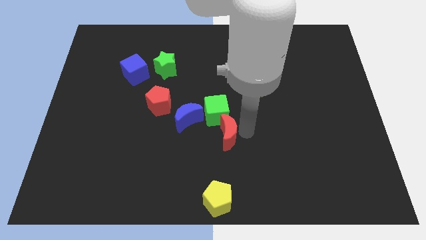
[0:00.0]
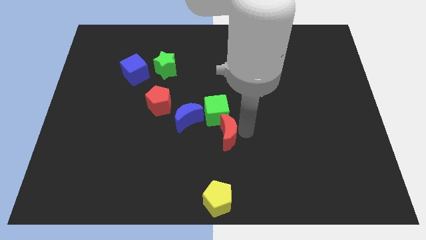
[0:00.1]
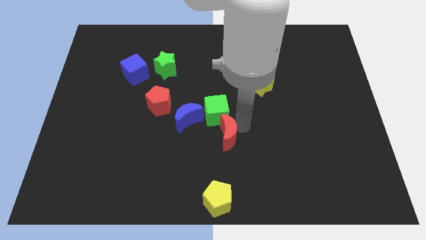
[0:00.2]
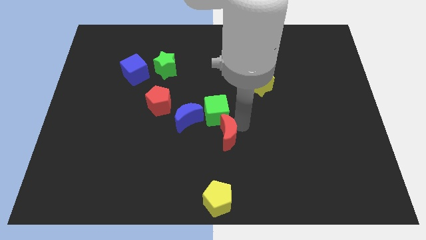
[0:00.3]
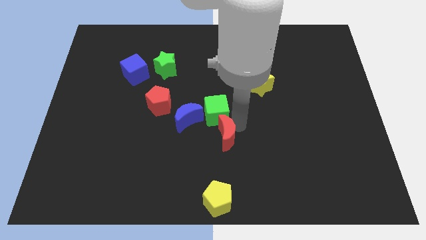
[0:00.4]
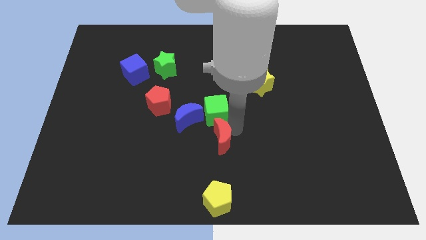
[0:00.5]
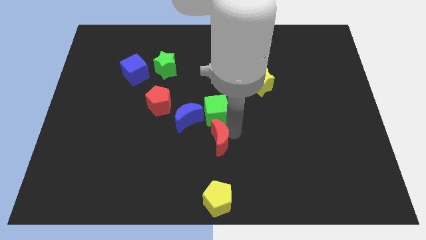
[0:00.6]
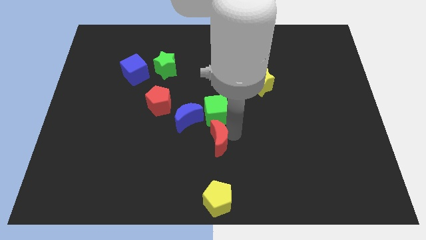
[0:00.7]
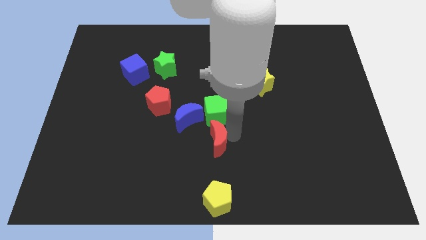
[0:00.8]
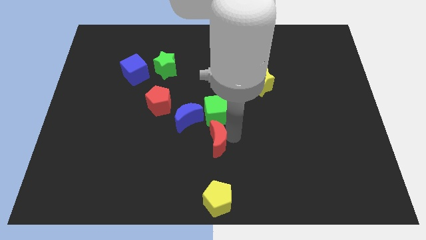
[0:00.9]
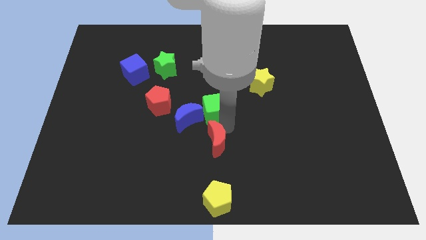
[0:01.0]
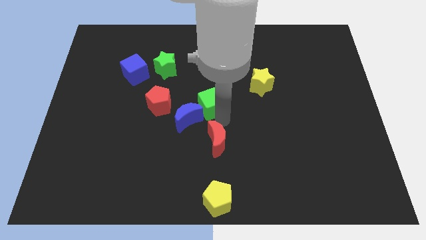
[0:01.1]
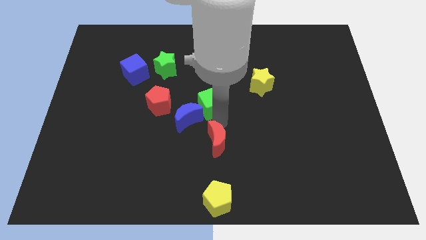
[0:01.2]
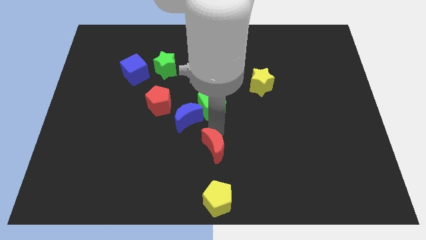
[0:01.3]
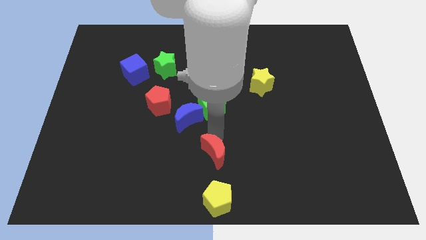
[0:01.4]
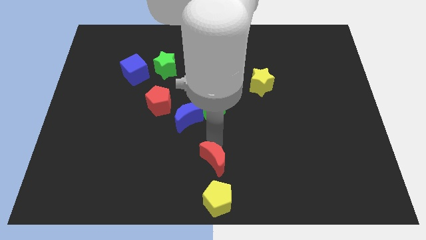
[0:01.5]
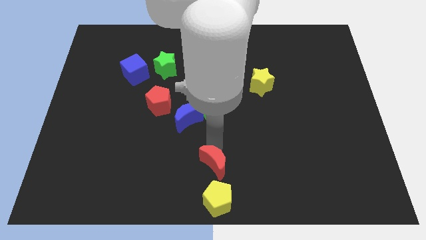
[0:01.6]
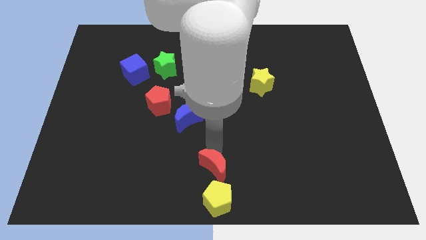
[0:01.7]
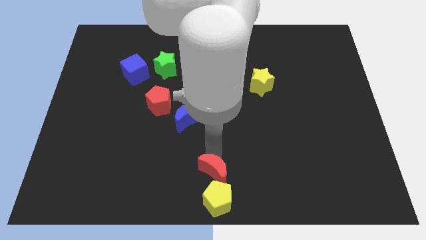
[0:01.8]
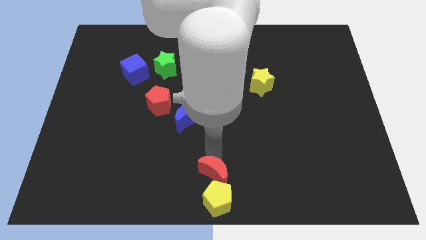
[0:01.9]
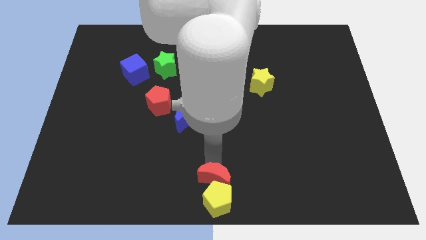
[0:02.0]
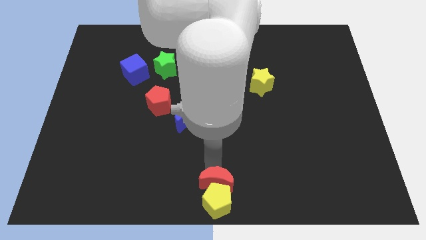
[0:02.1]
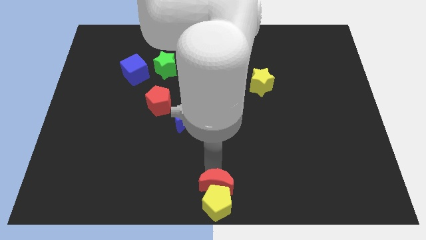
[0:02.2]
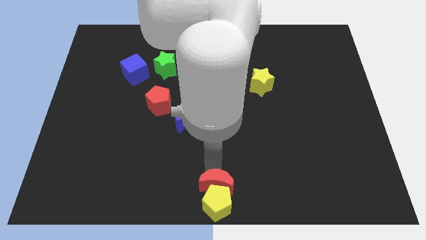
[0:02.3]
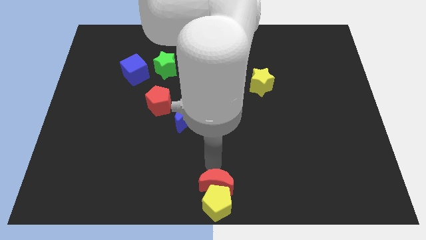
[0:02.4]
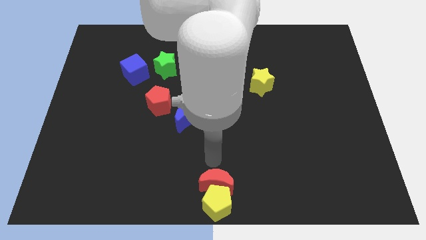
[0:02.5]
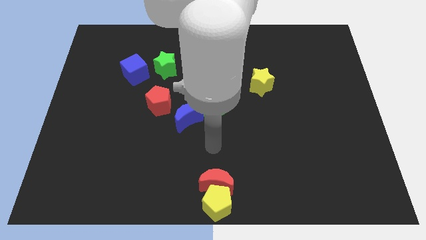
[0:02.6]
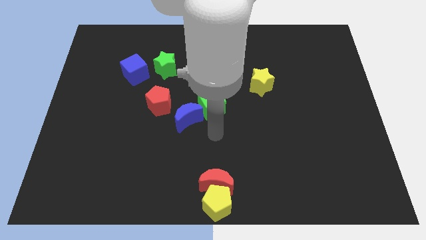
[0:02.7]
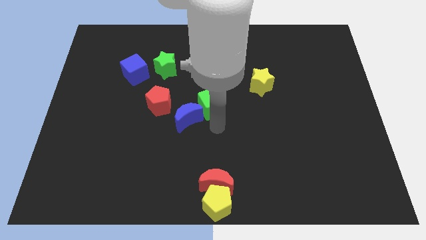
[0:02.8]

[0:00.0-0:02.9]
push the red moon into yellow pentagon

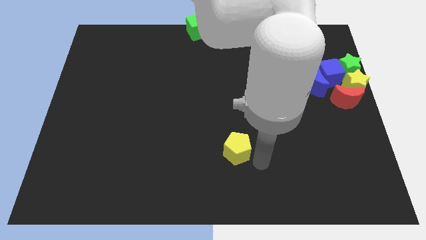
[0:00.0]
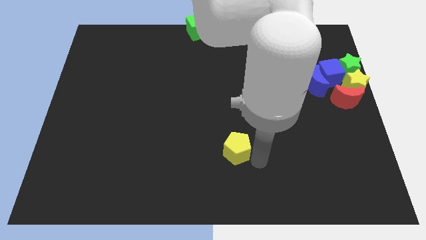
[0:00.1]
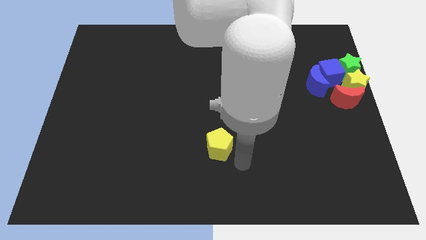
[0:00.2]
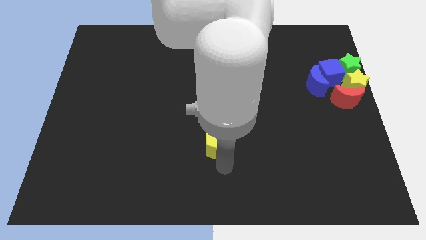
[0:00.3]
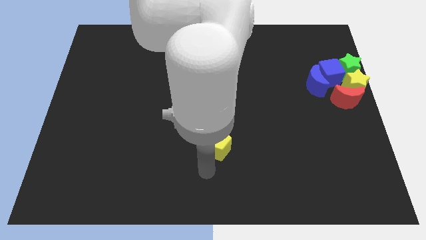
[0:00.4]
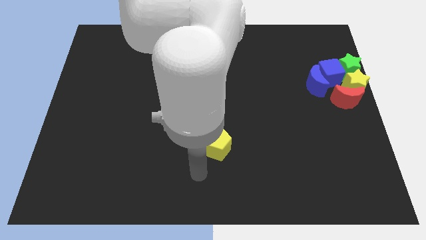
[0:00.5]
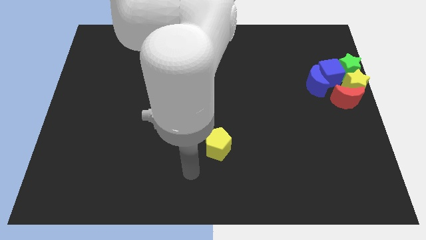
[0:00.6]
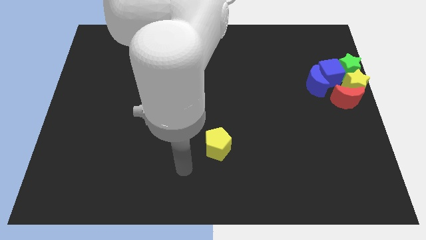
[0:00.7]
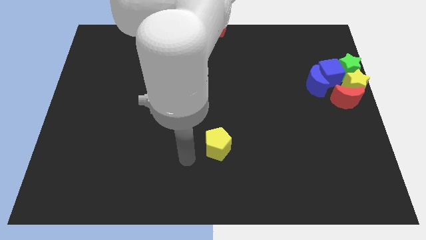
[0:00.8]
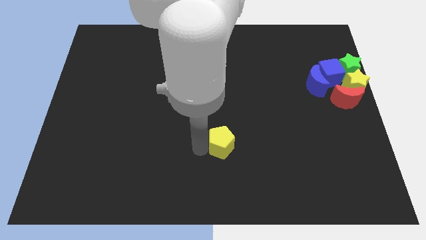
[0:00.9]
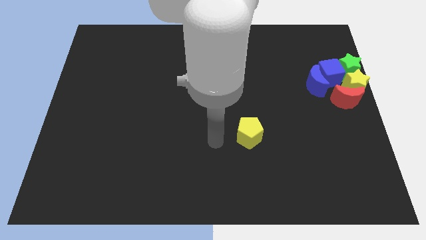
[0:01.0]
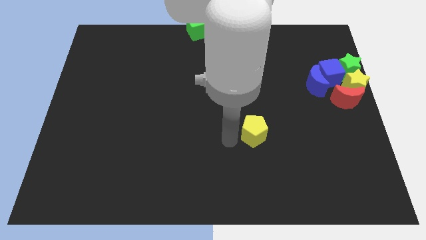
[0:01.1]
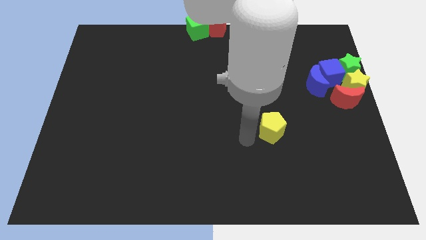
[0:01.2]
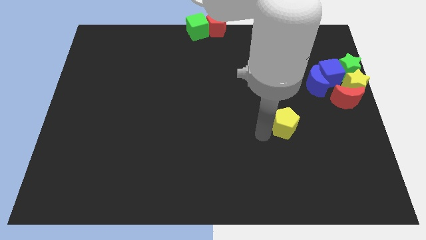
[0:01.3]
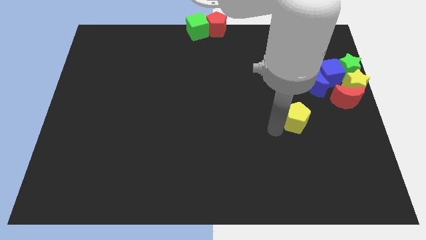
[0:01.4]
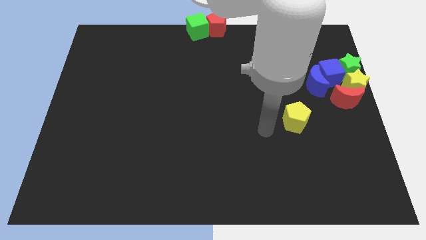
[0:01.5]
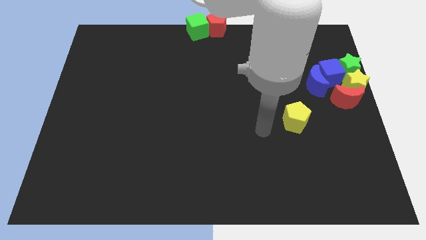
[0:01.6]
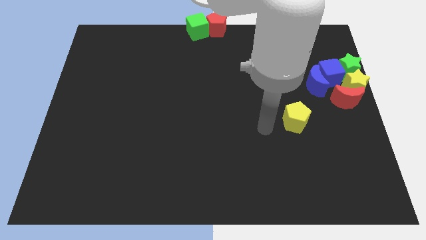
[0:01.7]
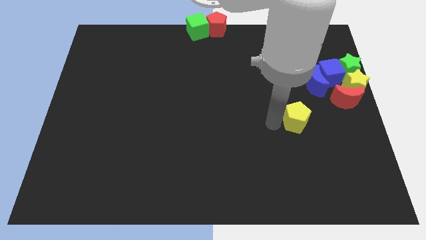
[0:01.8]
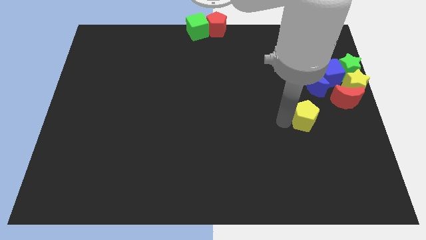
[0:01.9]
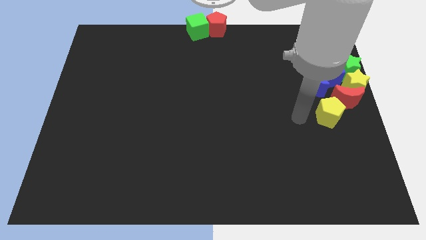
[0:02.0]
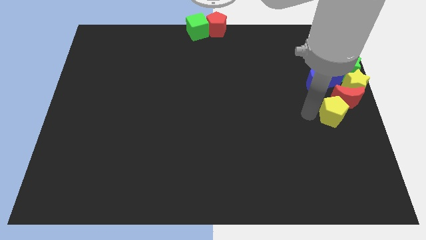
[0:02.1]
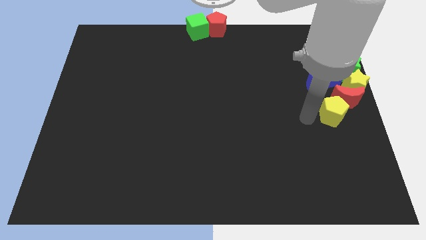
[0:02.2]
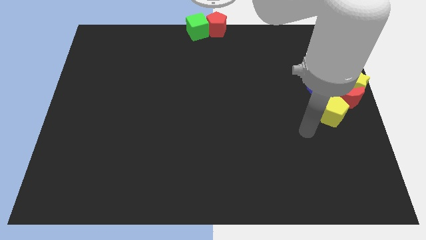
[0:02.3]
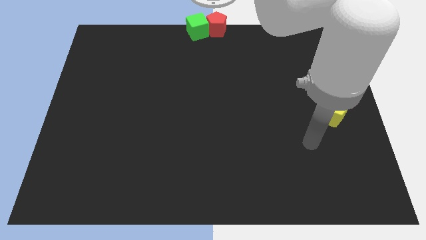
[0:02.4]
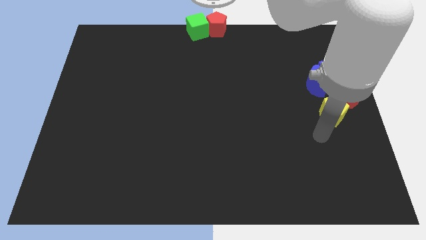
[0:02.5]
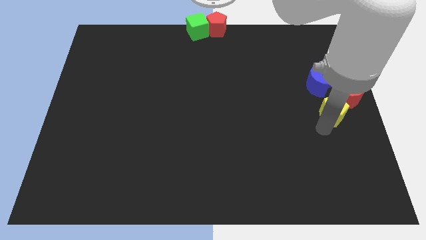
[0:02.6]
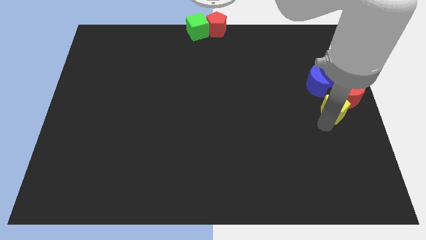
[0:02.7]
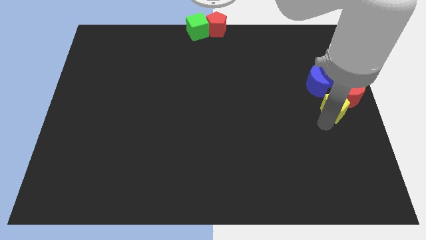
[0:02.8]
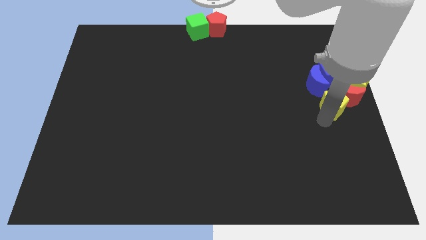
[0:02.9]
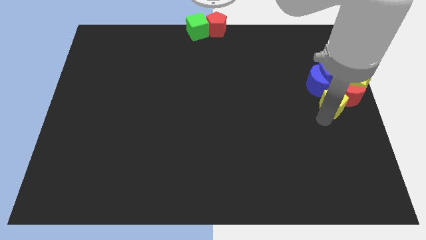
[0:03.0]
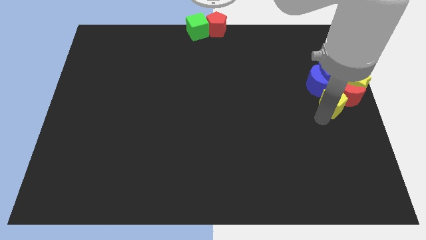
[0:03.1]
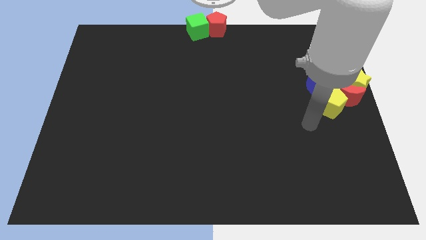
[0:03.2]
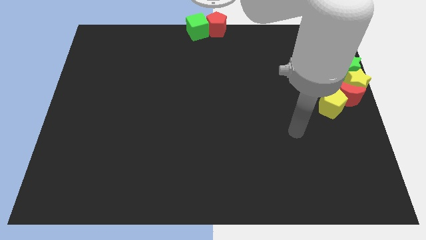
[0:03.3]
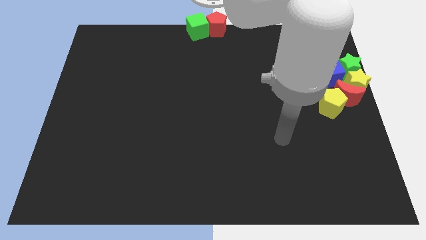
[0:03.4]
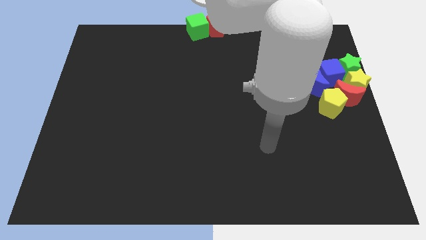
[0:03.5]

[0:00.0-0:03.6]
move yellow pentagon into group of blocks

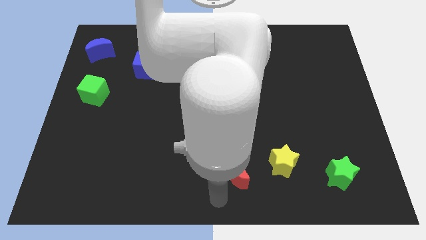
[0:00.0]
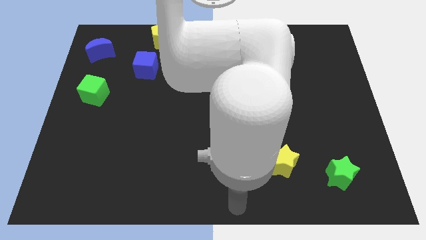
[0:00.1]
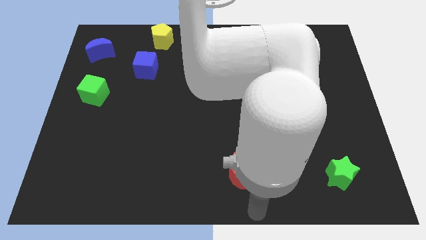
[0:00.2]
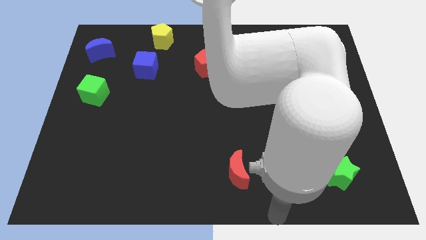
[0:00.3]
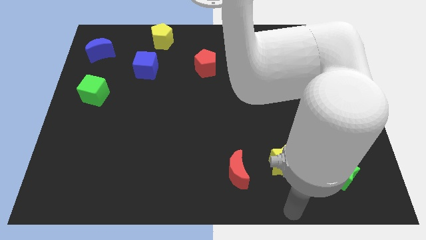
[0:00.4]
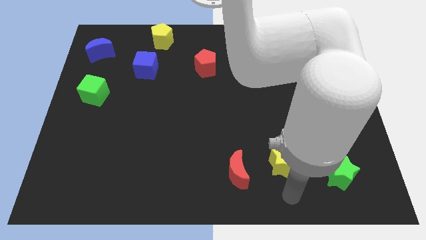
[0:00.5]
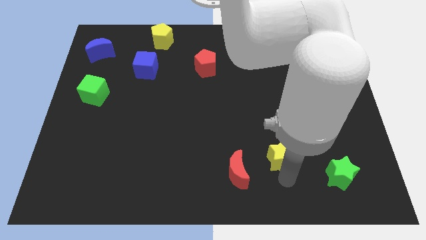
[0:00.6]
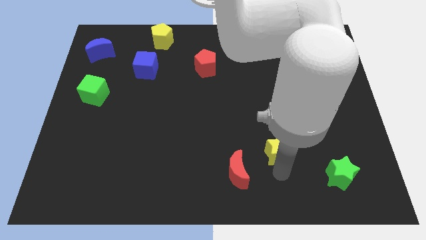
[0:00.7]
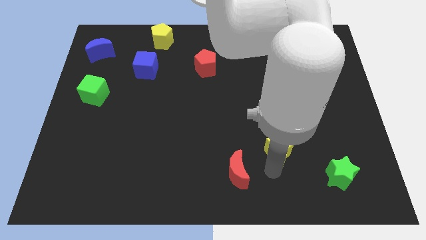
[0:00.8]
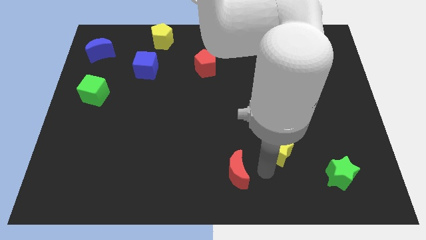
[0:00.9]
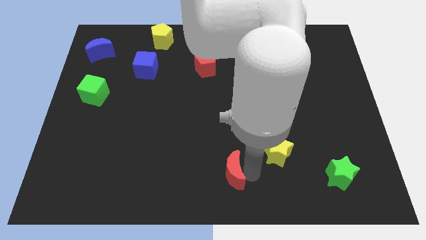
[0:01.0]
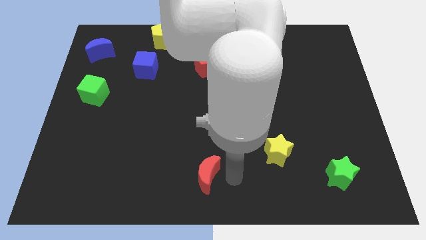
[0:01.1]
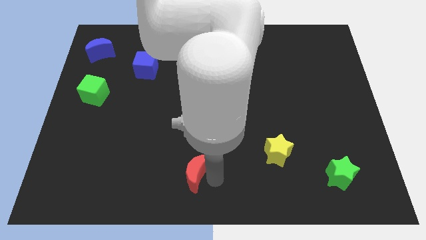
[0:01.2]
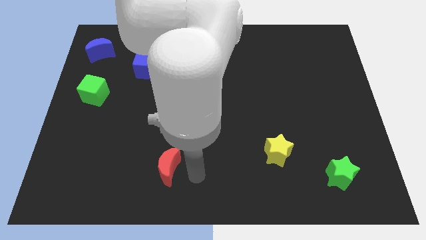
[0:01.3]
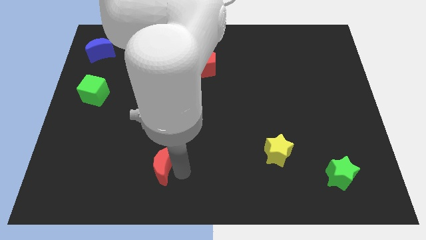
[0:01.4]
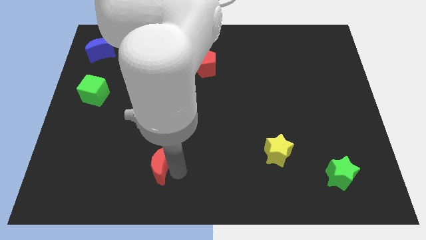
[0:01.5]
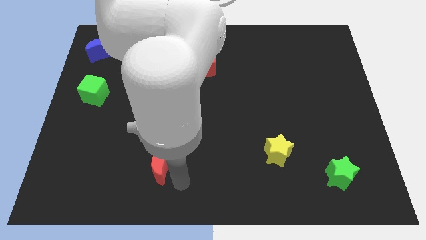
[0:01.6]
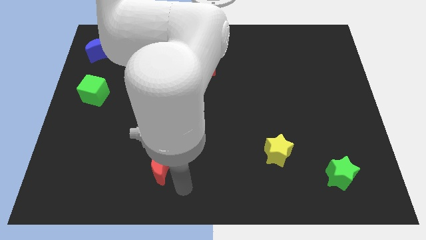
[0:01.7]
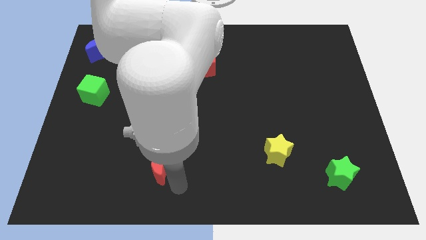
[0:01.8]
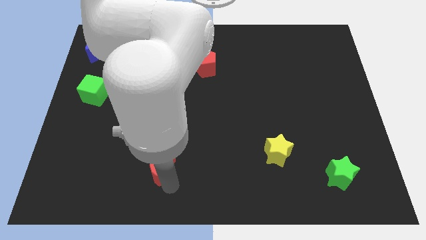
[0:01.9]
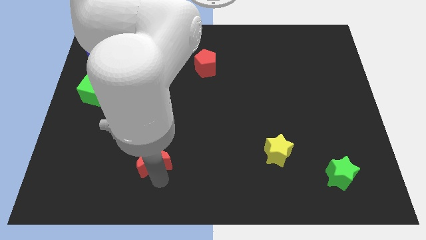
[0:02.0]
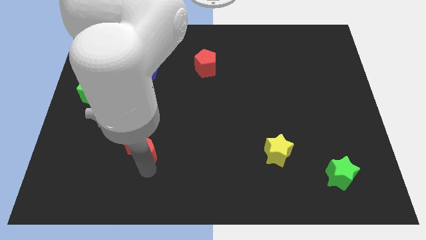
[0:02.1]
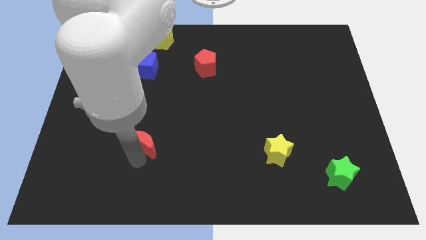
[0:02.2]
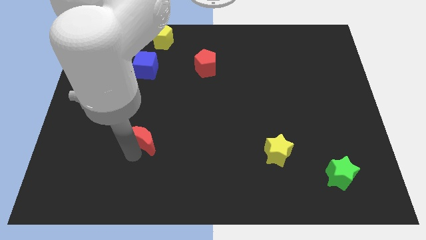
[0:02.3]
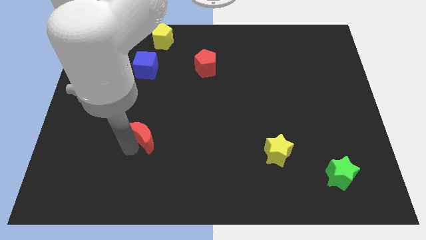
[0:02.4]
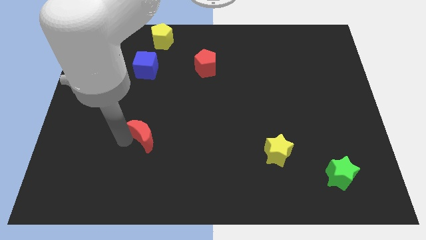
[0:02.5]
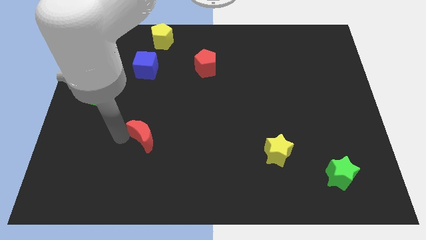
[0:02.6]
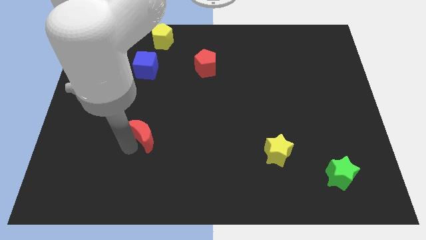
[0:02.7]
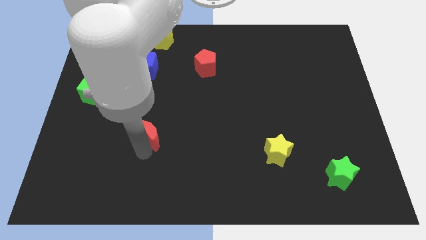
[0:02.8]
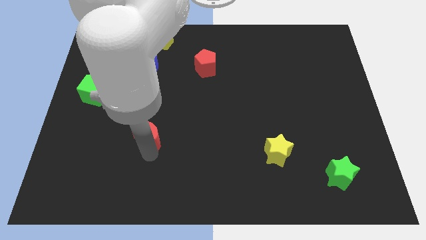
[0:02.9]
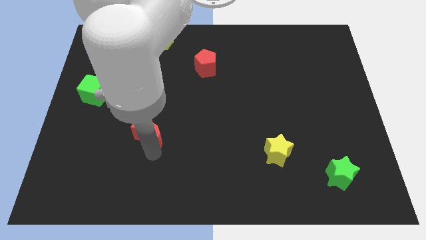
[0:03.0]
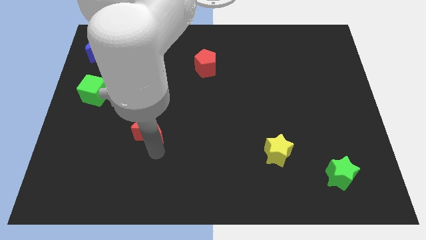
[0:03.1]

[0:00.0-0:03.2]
push the red moon below the blue cube
